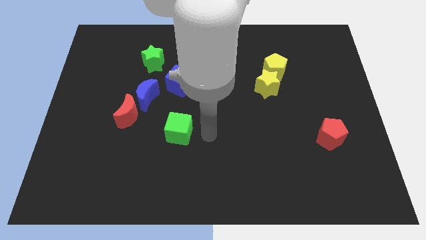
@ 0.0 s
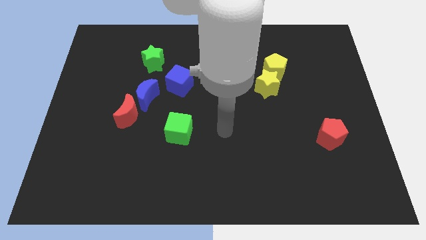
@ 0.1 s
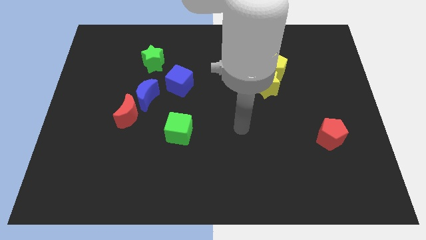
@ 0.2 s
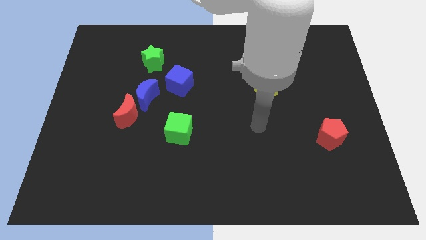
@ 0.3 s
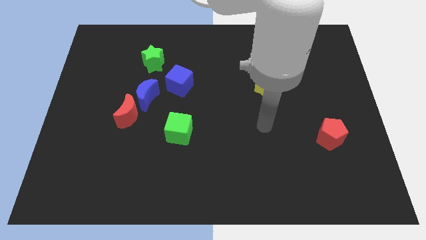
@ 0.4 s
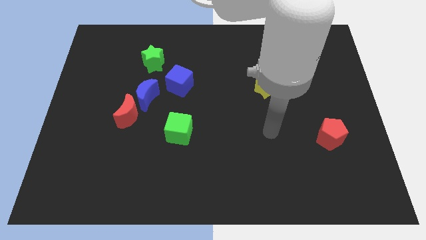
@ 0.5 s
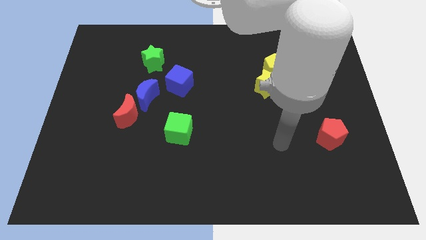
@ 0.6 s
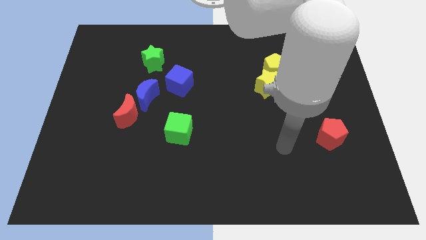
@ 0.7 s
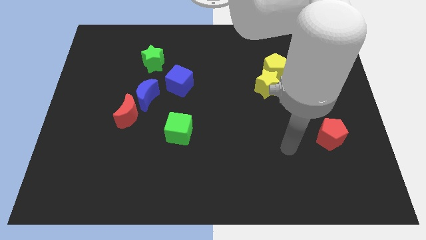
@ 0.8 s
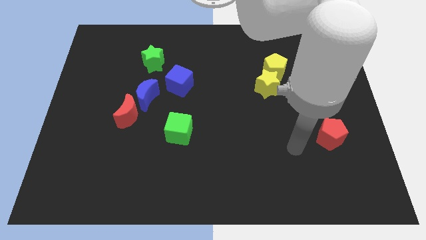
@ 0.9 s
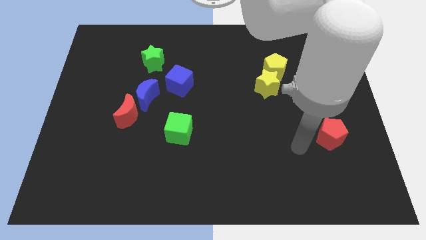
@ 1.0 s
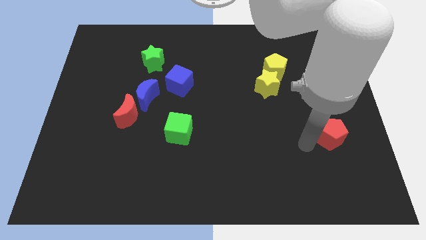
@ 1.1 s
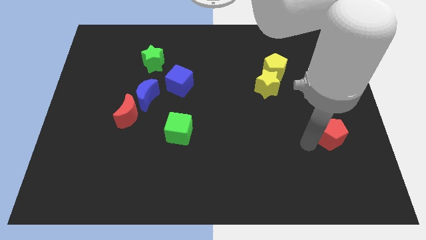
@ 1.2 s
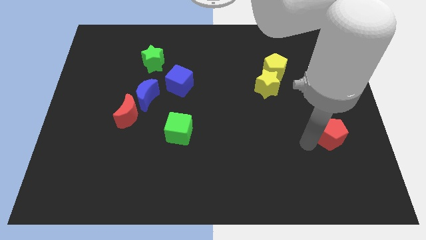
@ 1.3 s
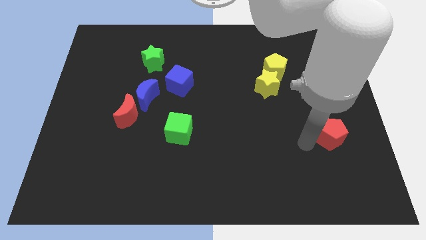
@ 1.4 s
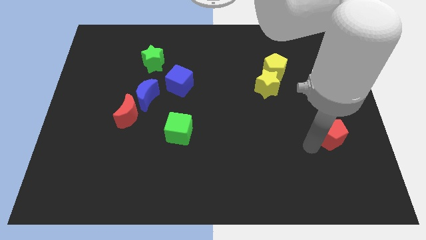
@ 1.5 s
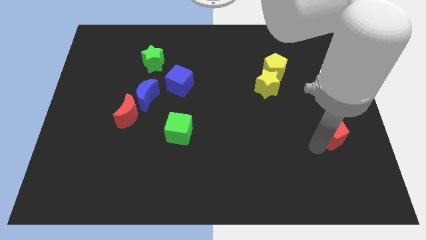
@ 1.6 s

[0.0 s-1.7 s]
place your hand diagonally at the bottom left of the red pentagon

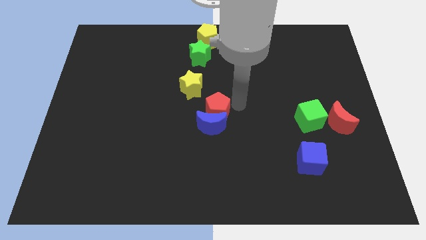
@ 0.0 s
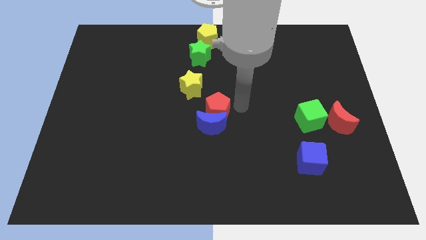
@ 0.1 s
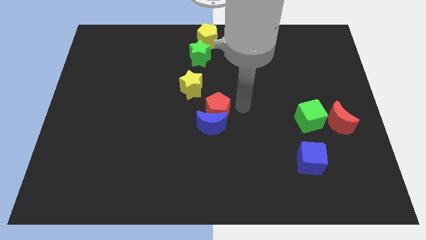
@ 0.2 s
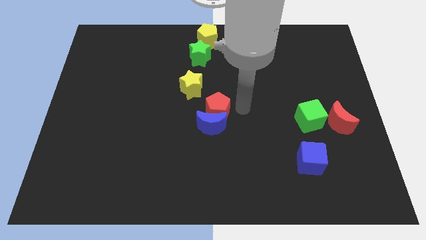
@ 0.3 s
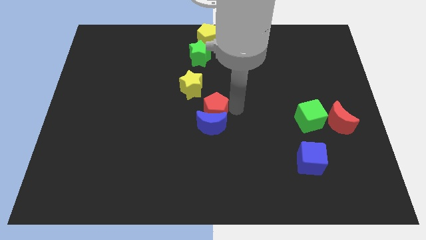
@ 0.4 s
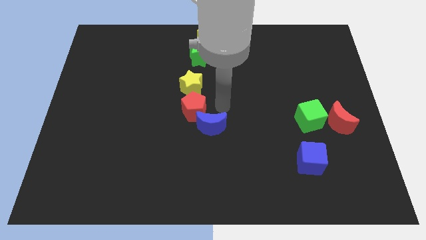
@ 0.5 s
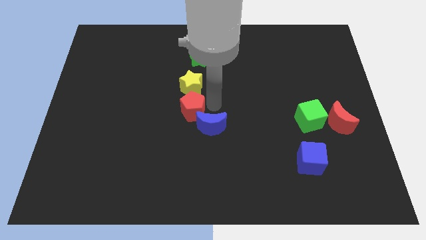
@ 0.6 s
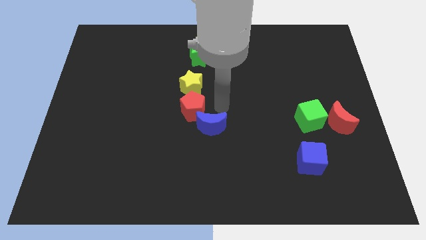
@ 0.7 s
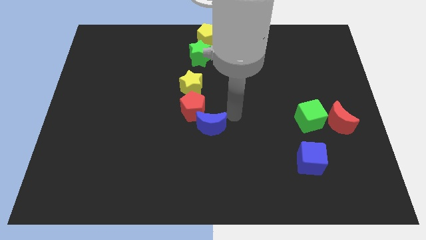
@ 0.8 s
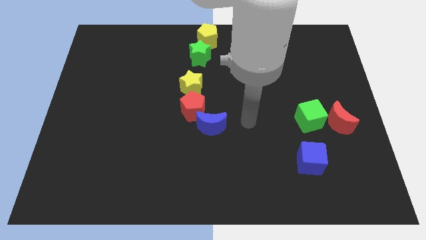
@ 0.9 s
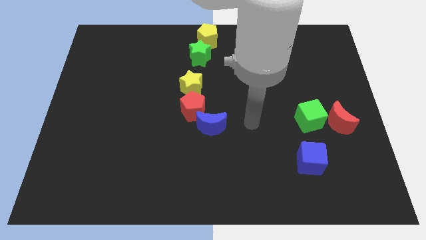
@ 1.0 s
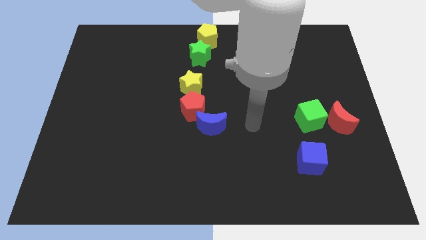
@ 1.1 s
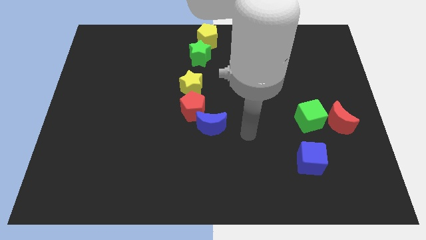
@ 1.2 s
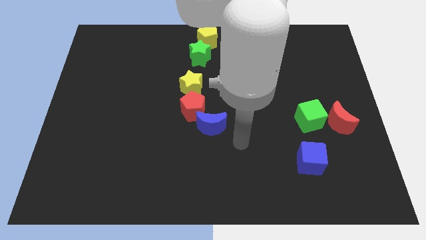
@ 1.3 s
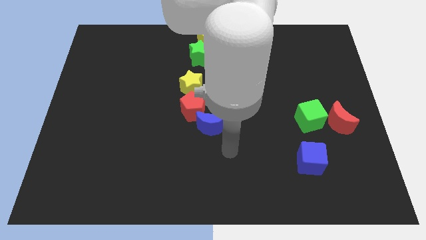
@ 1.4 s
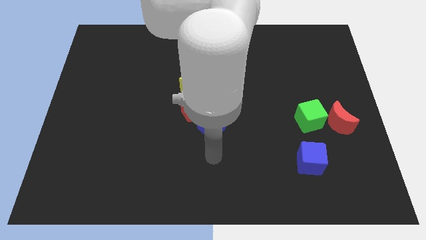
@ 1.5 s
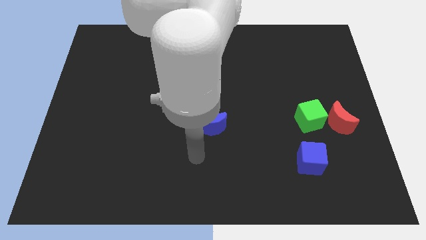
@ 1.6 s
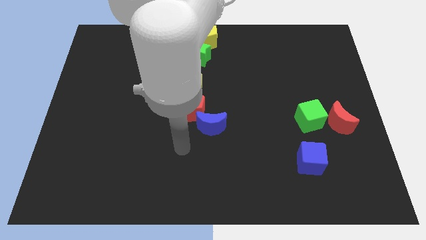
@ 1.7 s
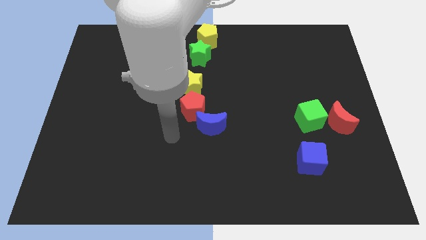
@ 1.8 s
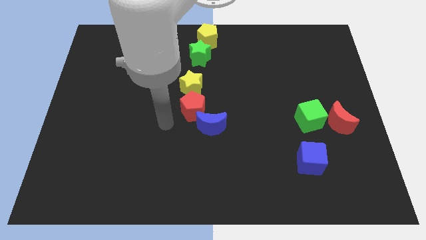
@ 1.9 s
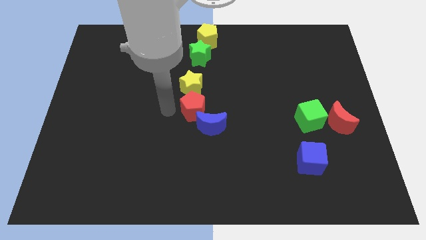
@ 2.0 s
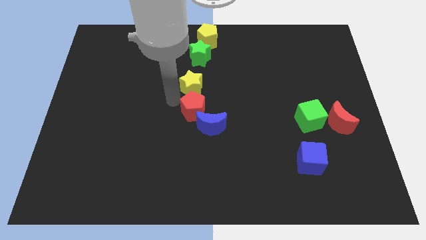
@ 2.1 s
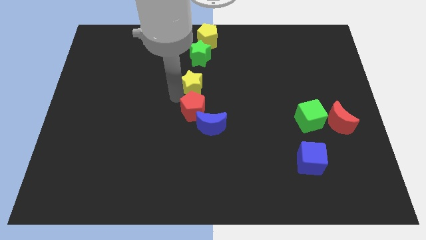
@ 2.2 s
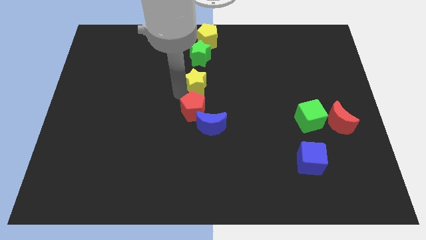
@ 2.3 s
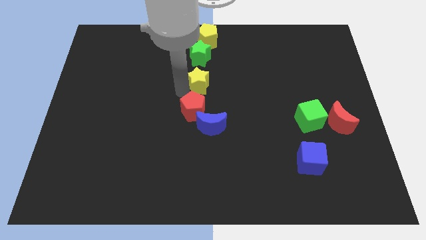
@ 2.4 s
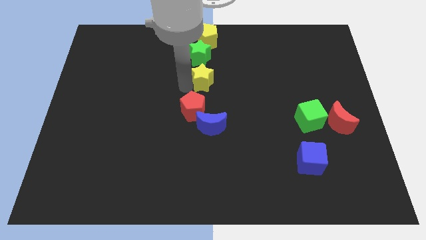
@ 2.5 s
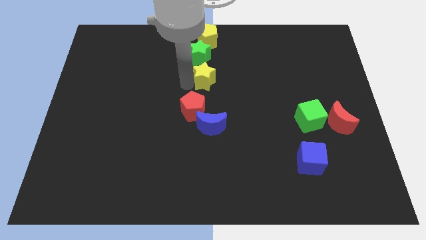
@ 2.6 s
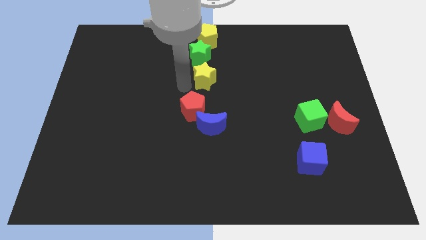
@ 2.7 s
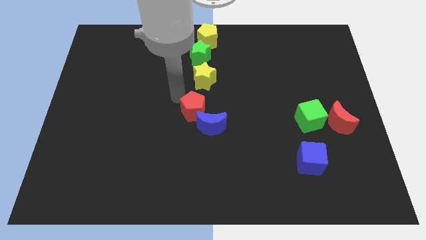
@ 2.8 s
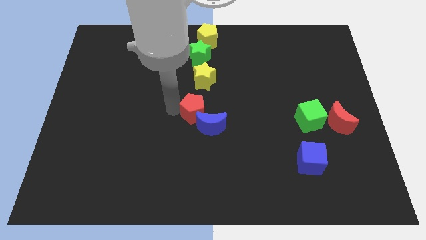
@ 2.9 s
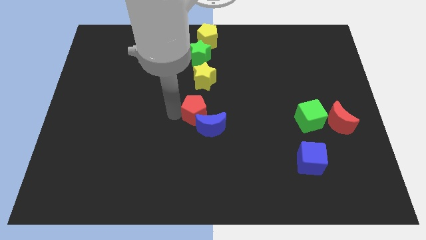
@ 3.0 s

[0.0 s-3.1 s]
move the red pentagon and yellow star in a vertical line

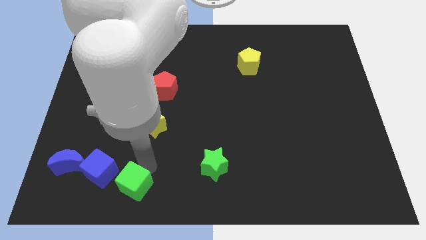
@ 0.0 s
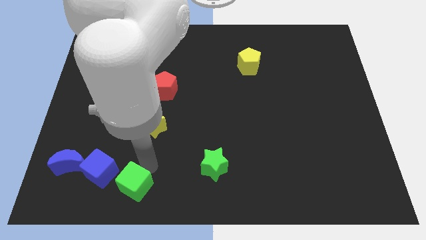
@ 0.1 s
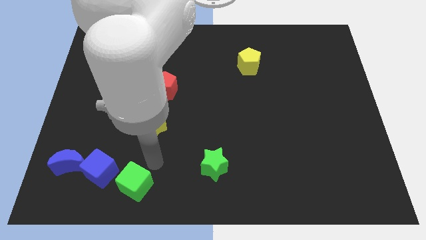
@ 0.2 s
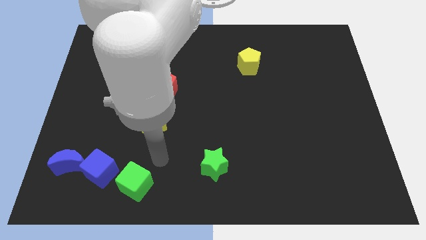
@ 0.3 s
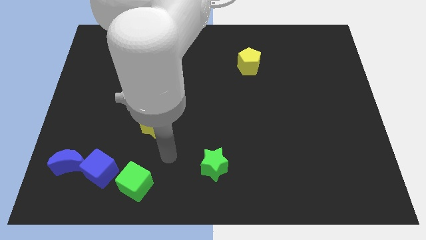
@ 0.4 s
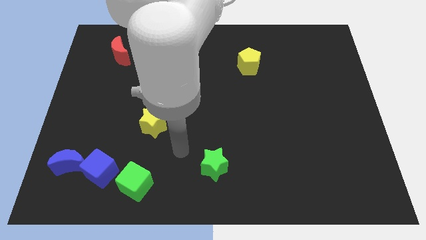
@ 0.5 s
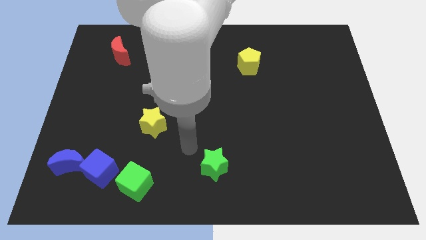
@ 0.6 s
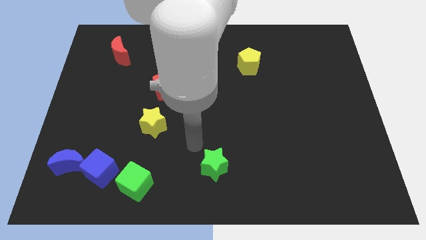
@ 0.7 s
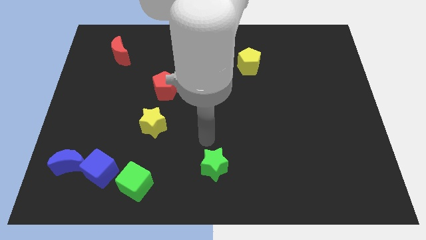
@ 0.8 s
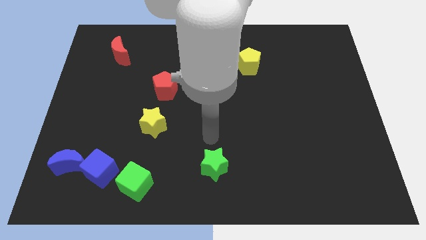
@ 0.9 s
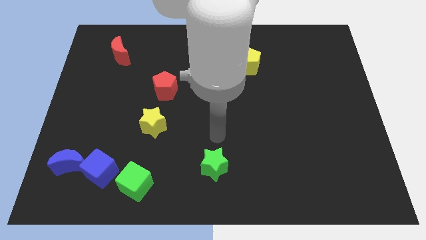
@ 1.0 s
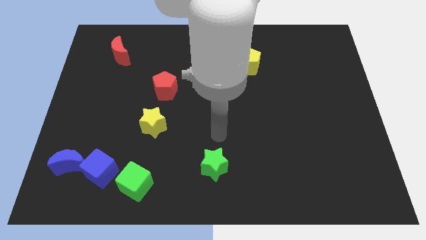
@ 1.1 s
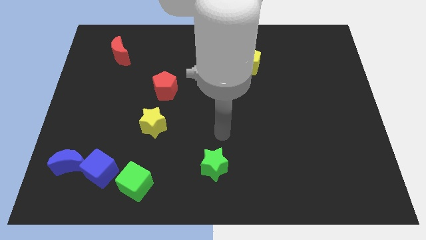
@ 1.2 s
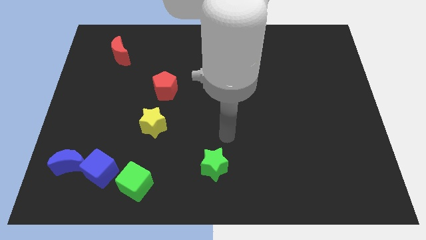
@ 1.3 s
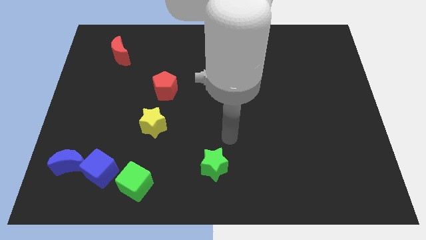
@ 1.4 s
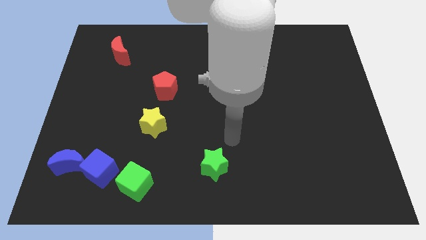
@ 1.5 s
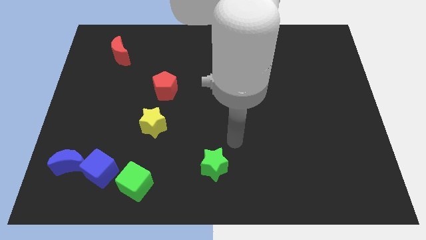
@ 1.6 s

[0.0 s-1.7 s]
move away from the green cube

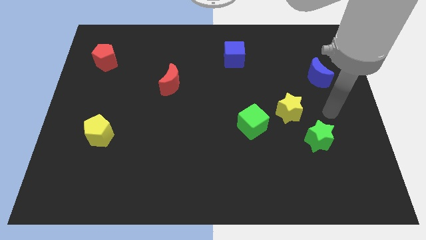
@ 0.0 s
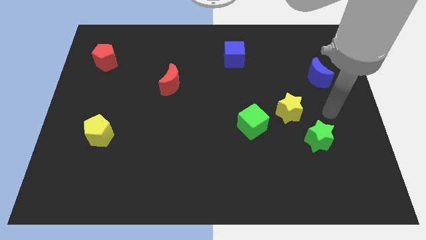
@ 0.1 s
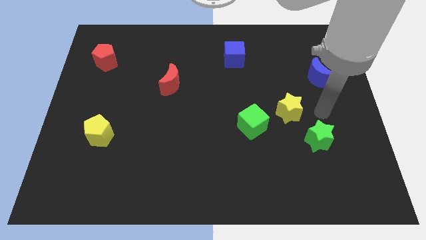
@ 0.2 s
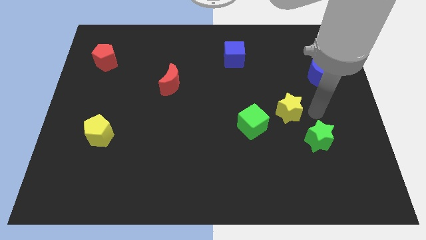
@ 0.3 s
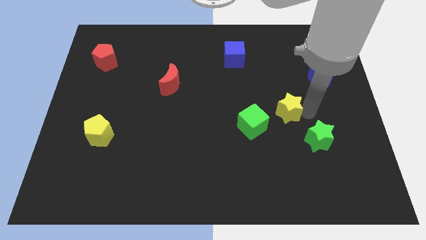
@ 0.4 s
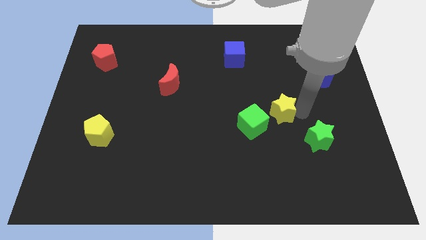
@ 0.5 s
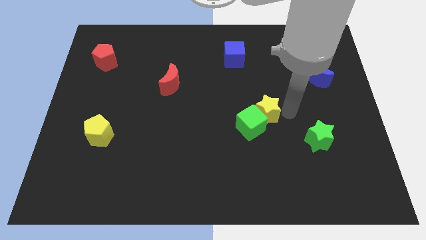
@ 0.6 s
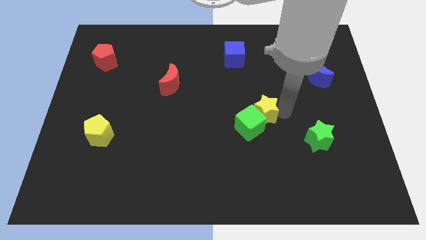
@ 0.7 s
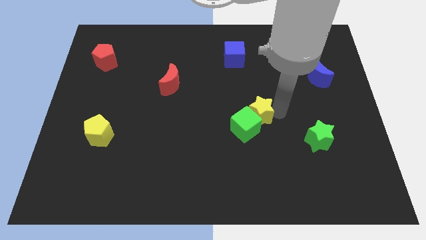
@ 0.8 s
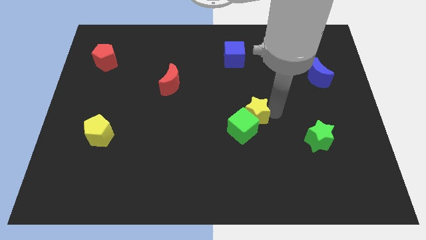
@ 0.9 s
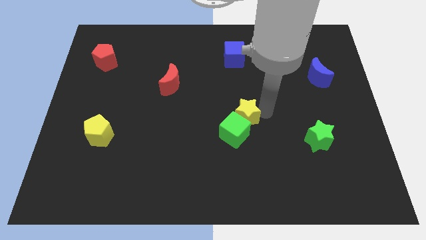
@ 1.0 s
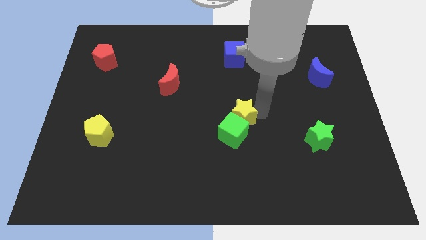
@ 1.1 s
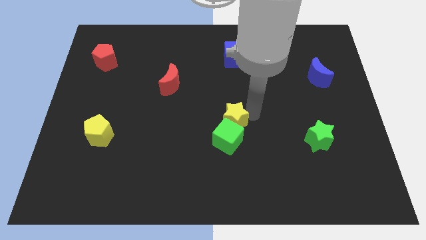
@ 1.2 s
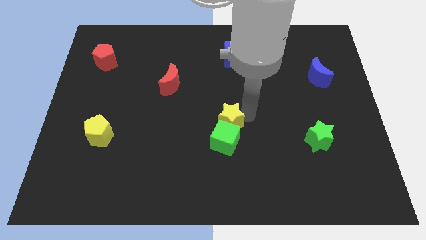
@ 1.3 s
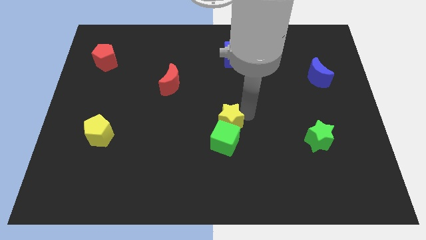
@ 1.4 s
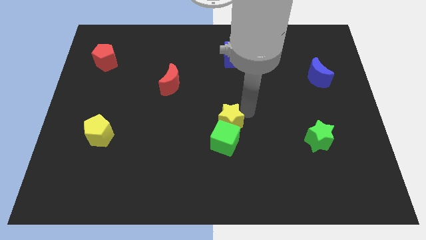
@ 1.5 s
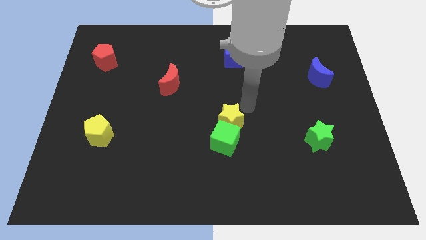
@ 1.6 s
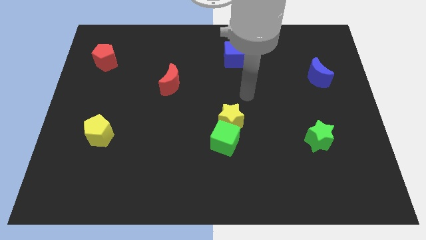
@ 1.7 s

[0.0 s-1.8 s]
push the yellow star into the green cube

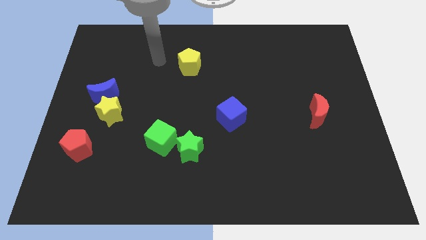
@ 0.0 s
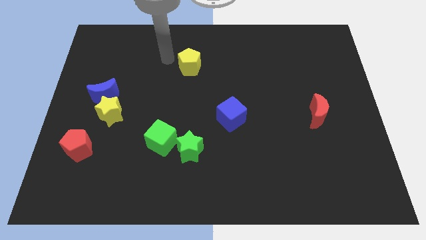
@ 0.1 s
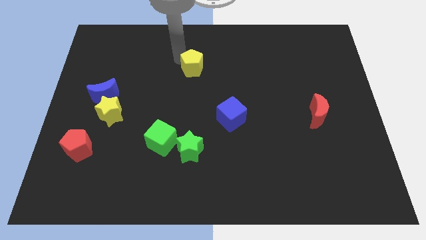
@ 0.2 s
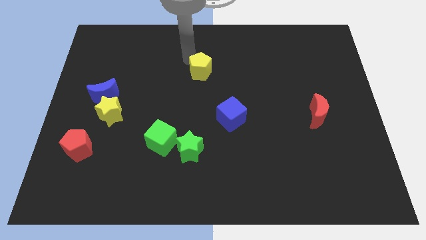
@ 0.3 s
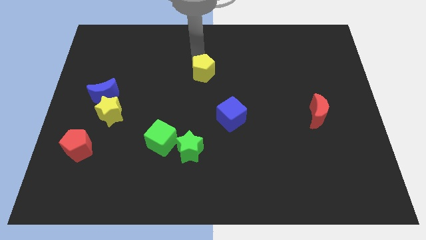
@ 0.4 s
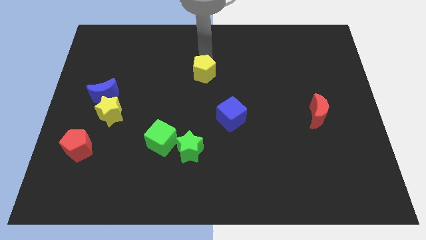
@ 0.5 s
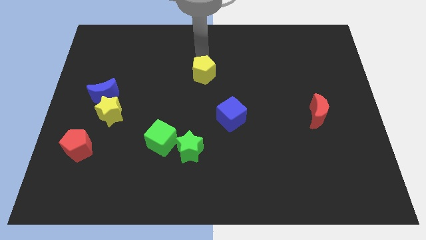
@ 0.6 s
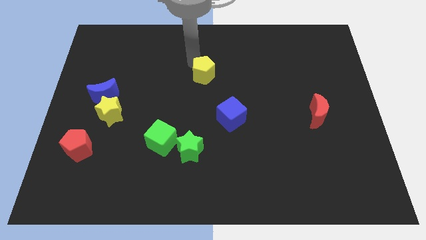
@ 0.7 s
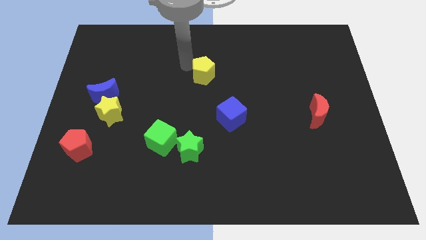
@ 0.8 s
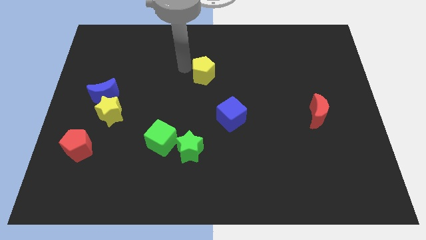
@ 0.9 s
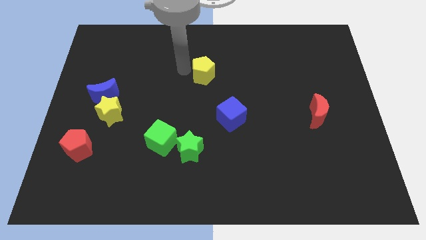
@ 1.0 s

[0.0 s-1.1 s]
slide yellow pentagon down diagonal left to blue cube
